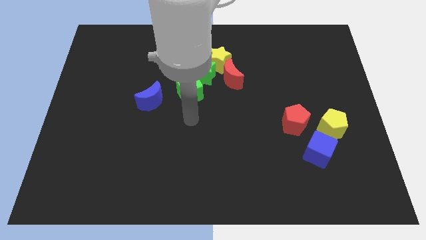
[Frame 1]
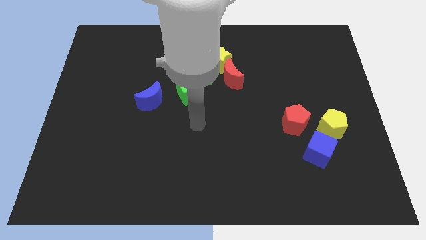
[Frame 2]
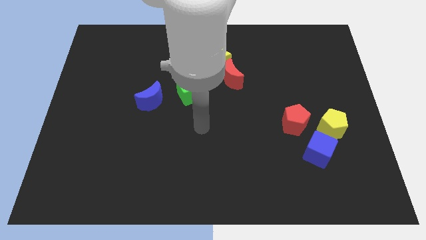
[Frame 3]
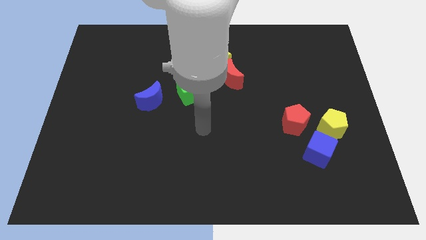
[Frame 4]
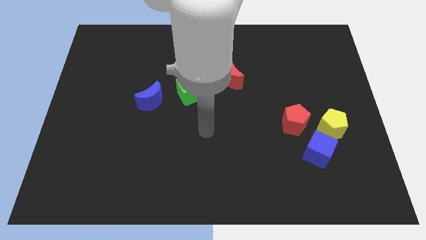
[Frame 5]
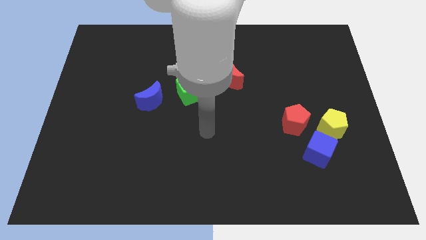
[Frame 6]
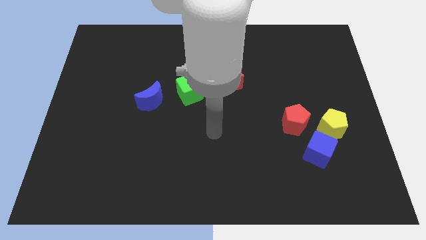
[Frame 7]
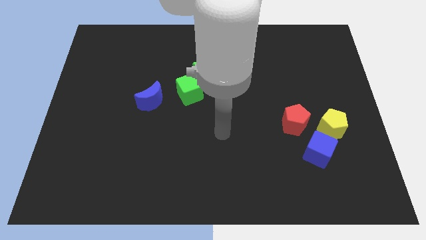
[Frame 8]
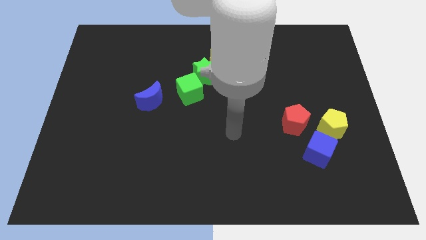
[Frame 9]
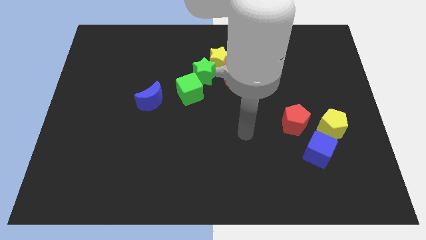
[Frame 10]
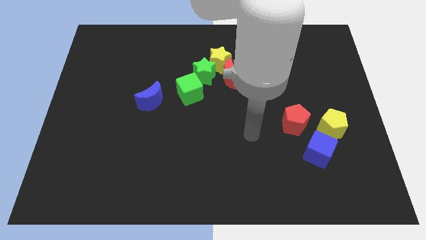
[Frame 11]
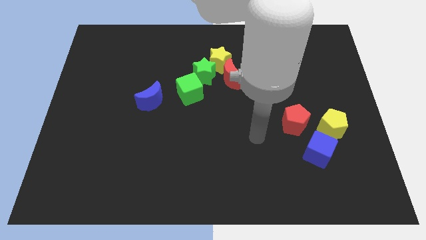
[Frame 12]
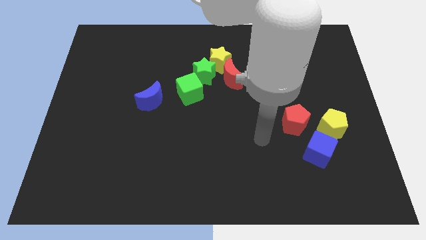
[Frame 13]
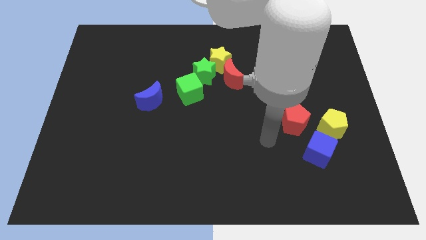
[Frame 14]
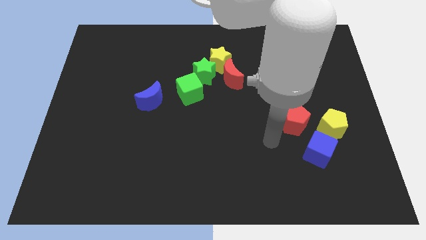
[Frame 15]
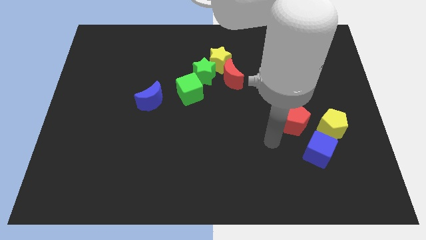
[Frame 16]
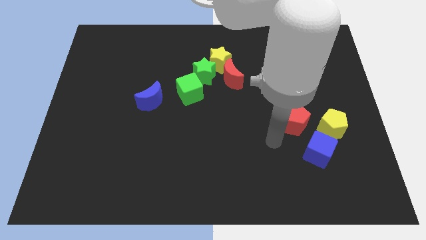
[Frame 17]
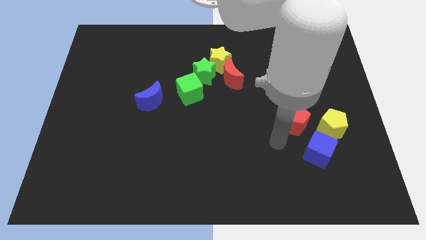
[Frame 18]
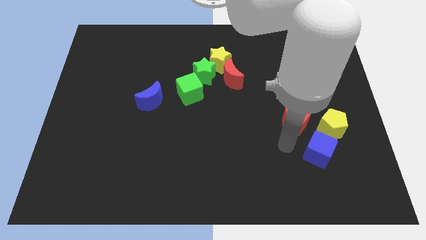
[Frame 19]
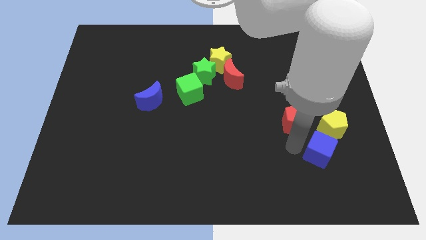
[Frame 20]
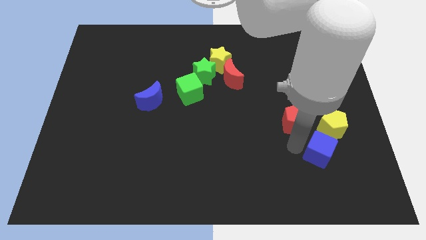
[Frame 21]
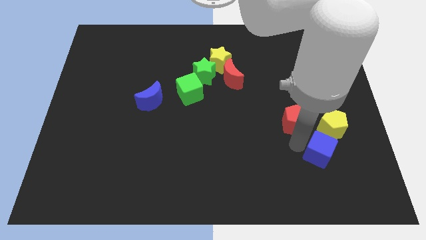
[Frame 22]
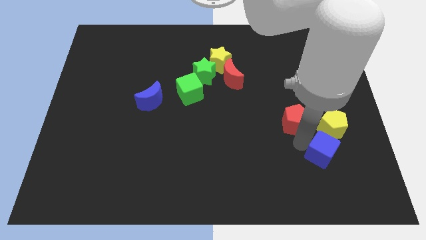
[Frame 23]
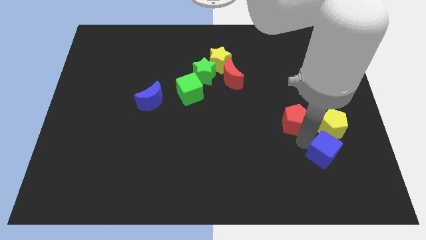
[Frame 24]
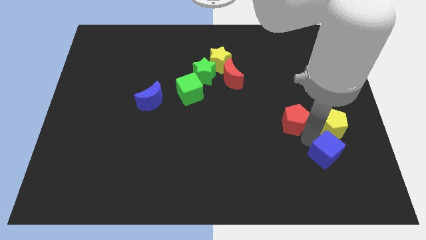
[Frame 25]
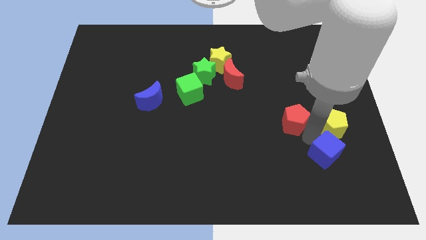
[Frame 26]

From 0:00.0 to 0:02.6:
move the blue cube slightly to the right

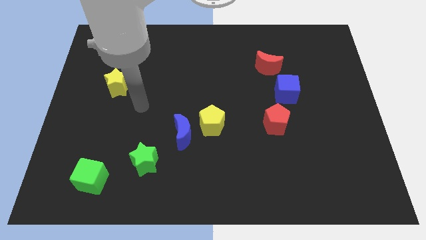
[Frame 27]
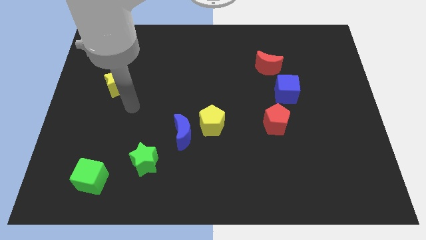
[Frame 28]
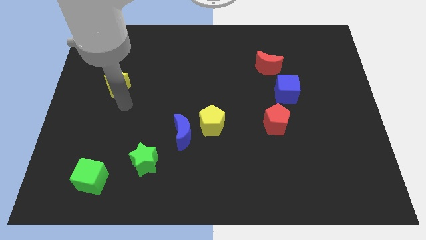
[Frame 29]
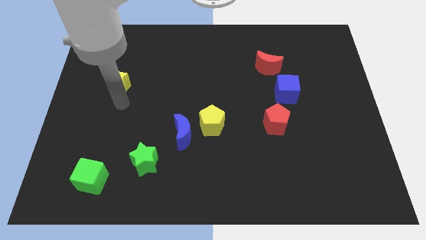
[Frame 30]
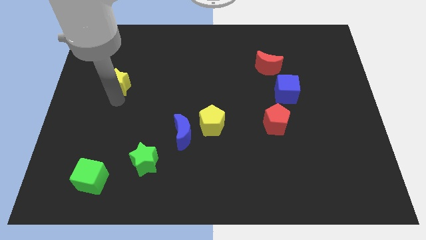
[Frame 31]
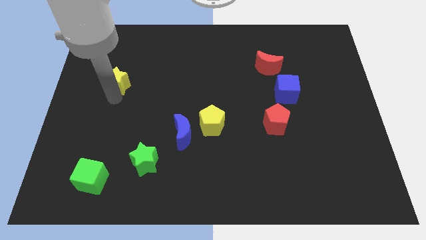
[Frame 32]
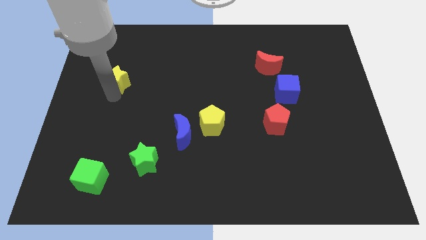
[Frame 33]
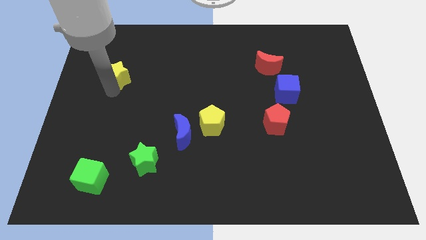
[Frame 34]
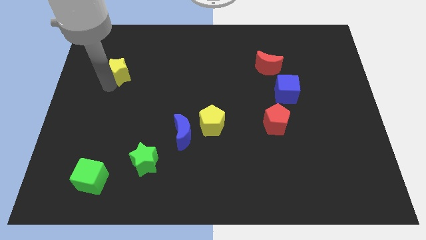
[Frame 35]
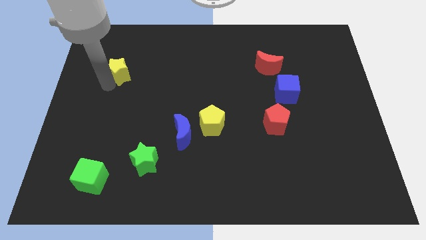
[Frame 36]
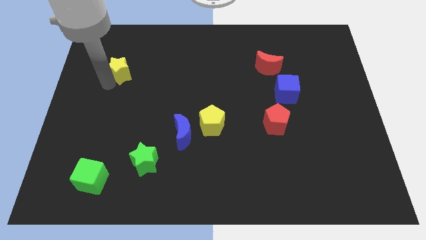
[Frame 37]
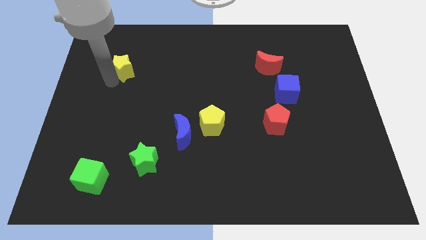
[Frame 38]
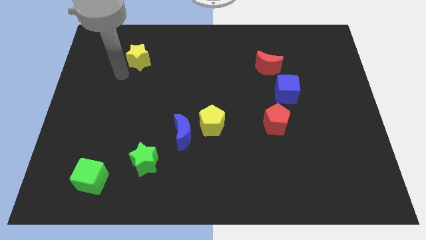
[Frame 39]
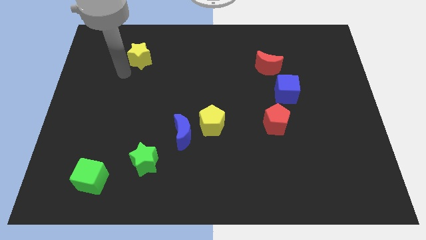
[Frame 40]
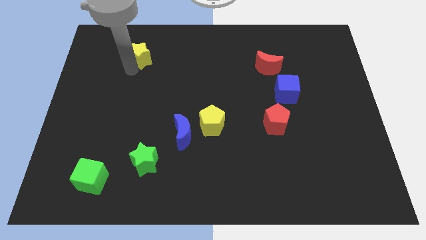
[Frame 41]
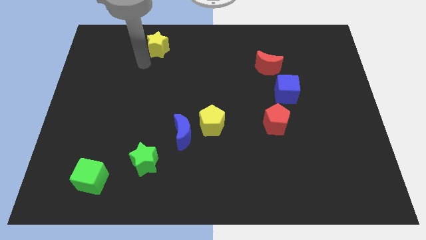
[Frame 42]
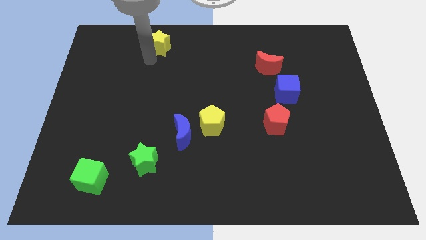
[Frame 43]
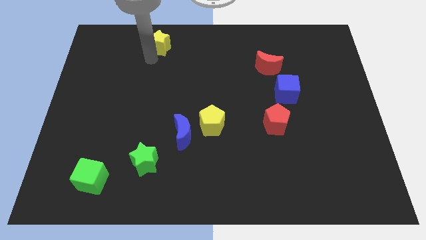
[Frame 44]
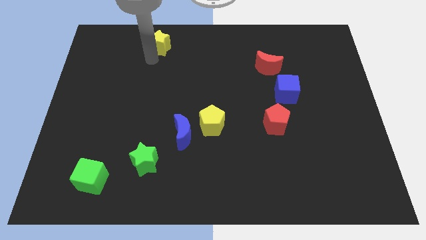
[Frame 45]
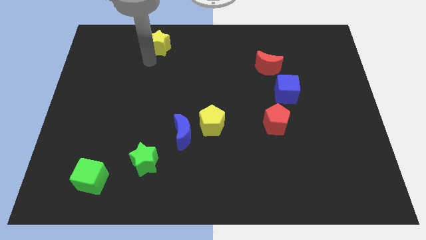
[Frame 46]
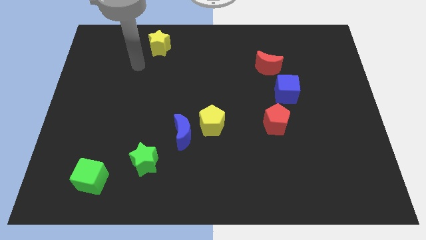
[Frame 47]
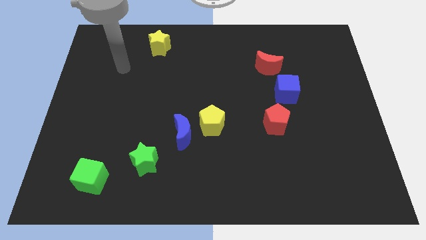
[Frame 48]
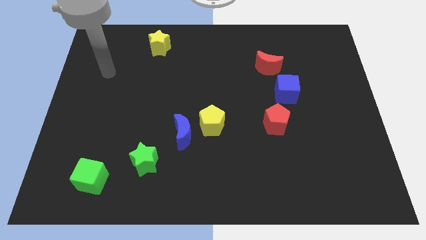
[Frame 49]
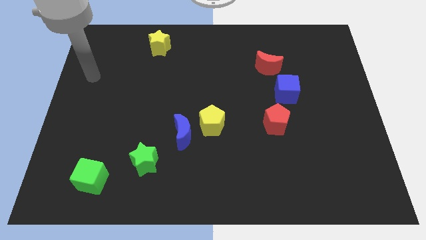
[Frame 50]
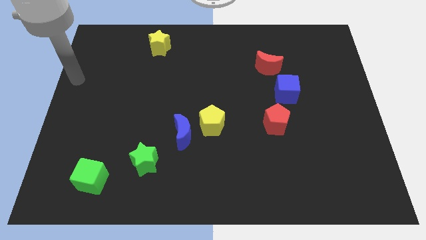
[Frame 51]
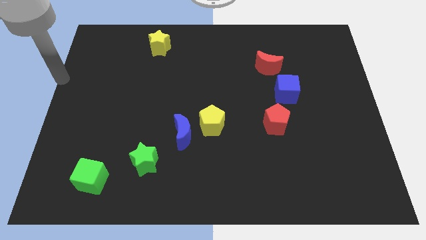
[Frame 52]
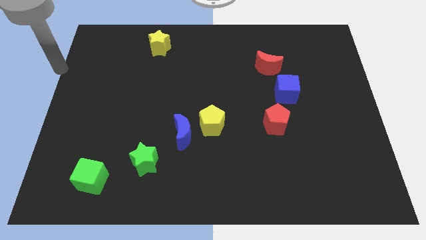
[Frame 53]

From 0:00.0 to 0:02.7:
place yellow star at top center

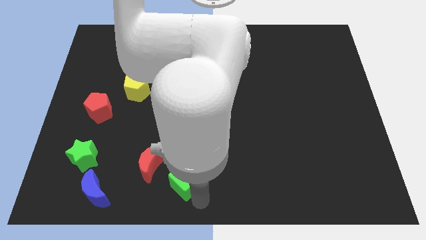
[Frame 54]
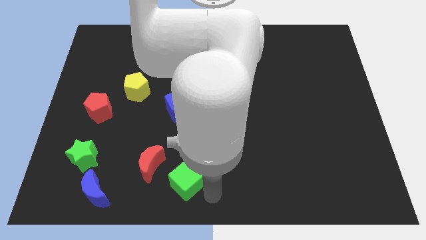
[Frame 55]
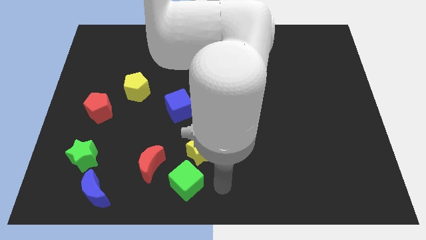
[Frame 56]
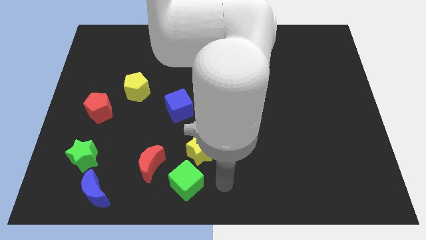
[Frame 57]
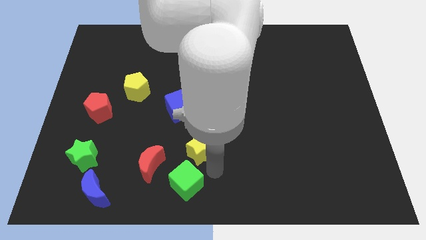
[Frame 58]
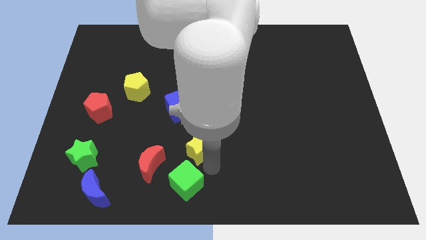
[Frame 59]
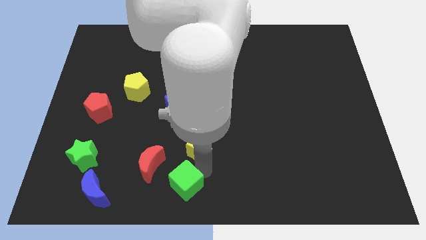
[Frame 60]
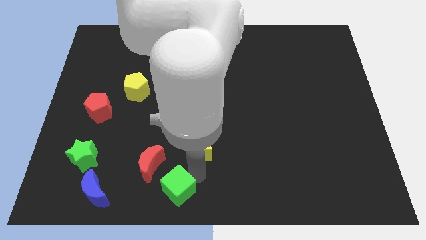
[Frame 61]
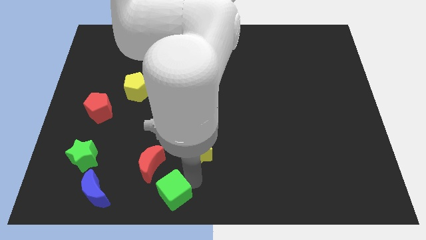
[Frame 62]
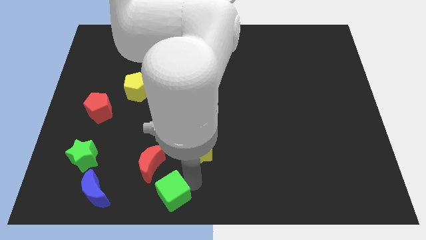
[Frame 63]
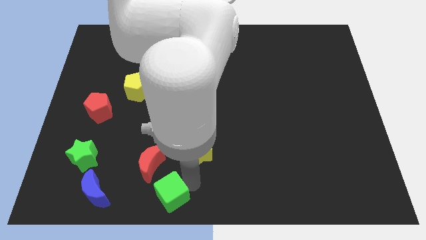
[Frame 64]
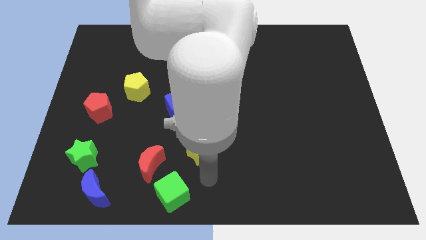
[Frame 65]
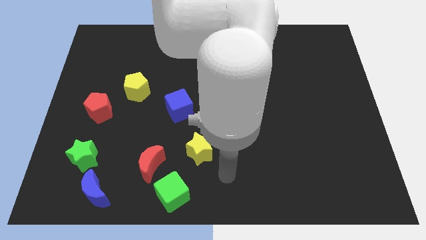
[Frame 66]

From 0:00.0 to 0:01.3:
move the green cube to the bottom center of the board

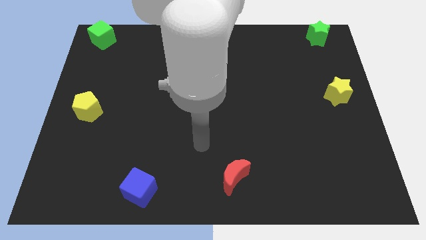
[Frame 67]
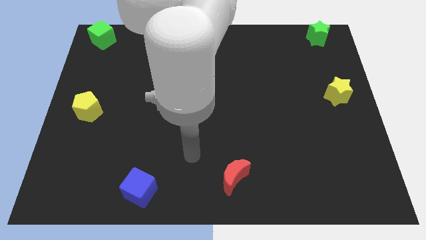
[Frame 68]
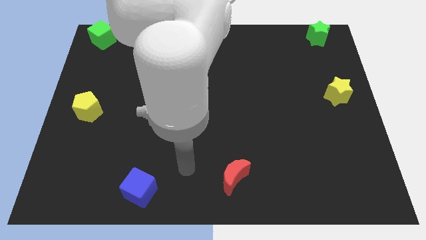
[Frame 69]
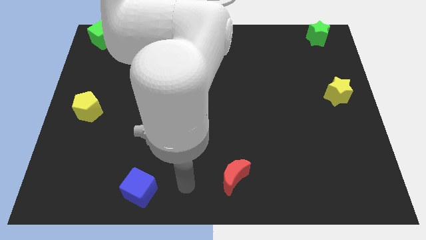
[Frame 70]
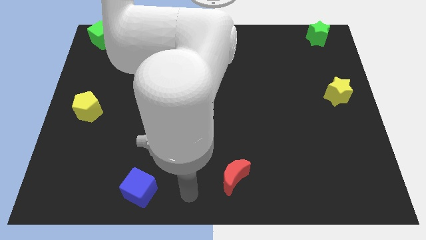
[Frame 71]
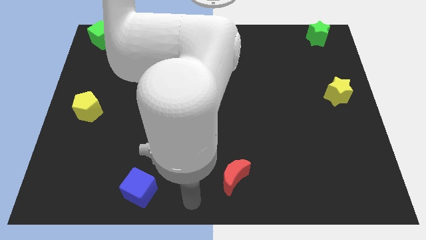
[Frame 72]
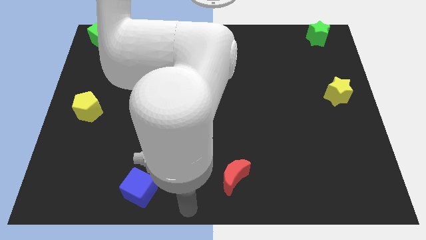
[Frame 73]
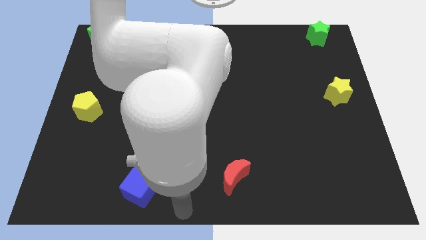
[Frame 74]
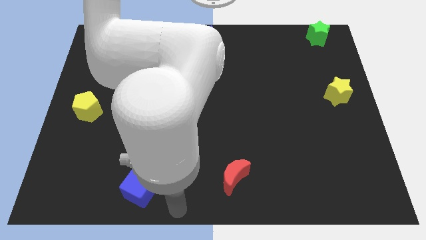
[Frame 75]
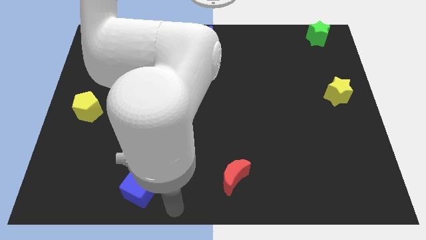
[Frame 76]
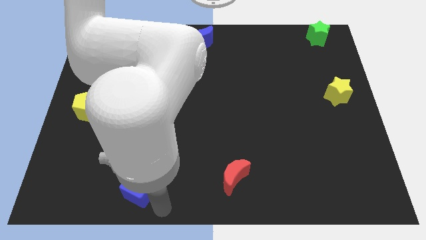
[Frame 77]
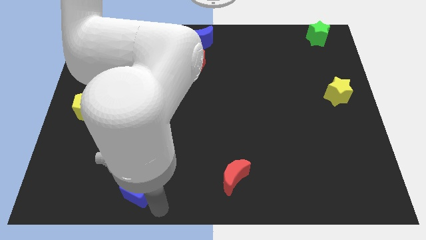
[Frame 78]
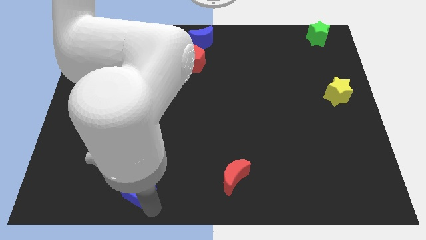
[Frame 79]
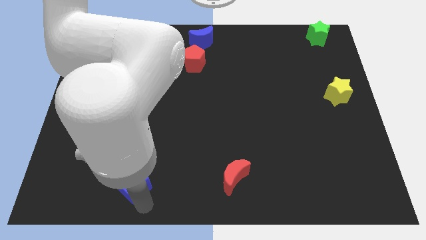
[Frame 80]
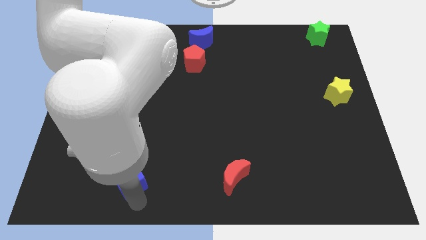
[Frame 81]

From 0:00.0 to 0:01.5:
push the blue cube towards the top side of the board

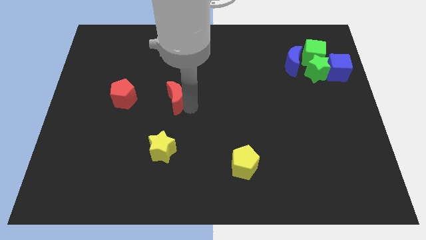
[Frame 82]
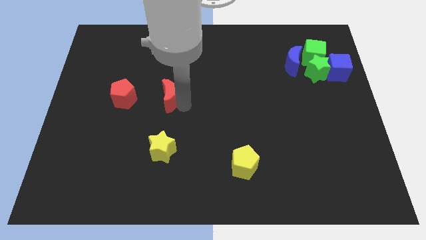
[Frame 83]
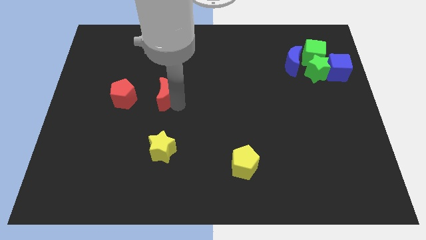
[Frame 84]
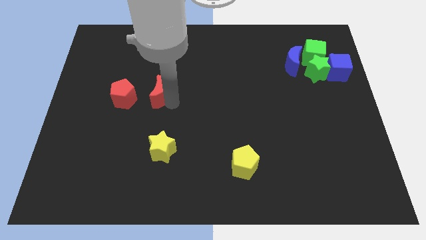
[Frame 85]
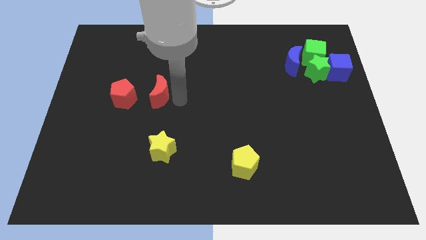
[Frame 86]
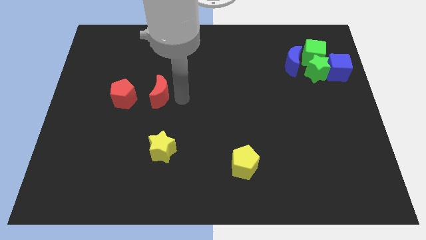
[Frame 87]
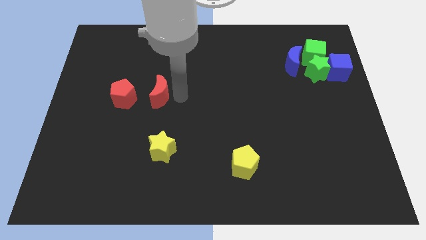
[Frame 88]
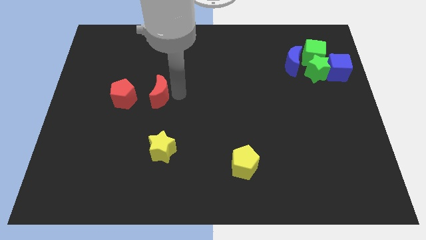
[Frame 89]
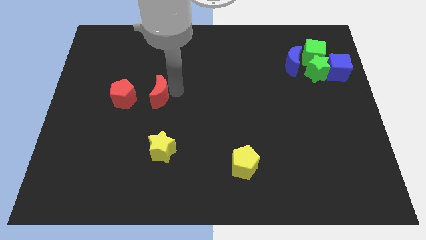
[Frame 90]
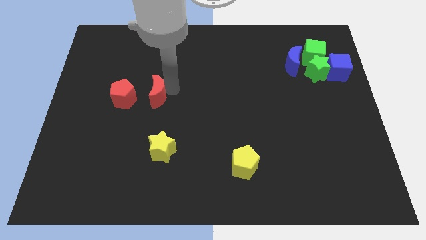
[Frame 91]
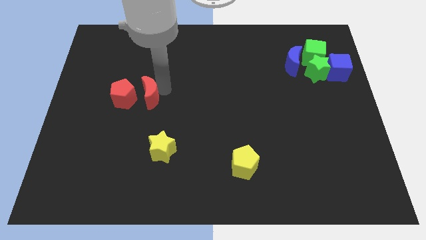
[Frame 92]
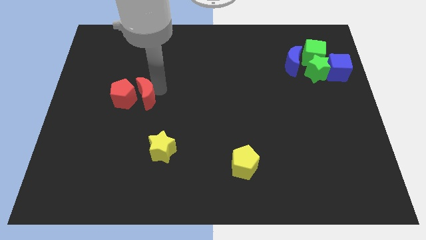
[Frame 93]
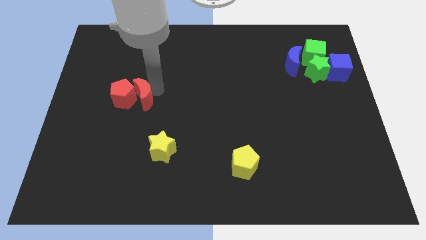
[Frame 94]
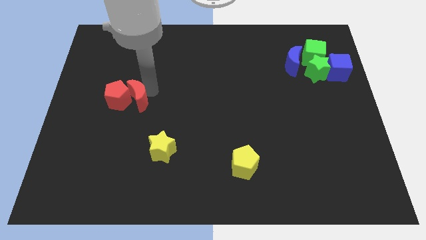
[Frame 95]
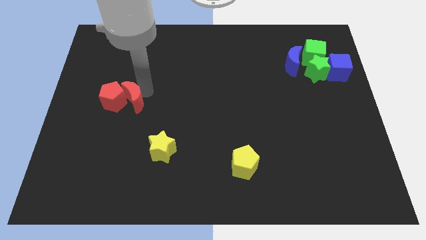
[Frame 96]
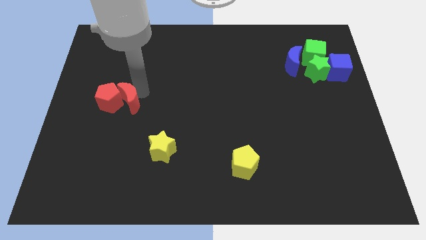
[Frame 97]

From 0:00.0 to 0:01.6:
move the red crescent into the red pentagon
